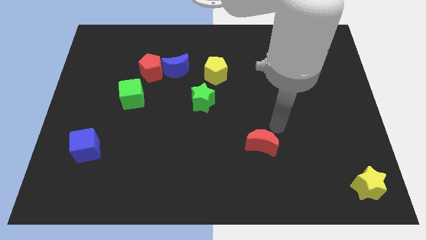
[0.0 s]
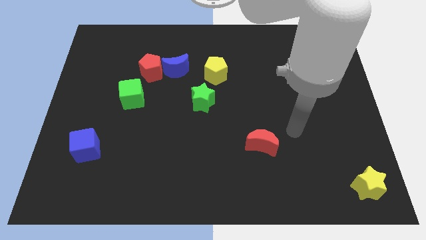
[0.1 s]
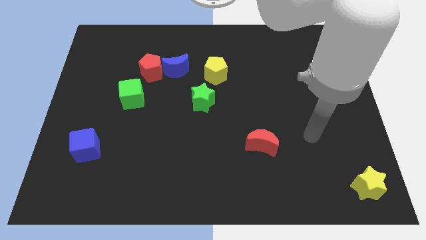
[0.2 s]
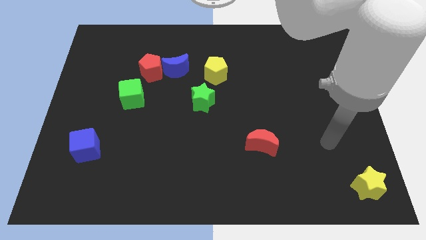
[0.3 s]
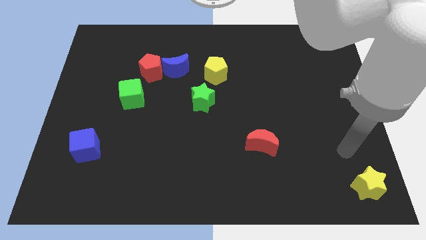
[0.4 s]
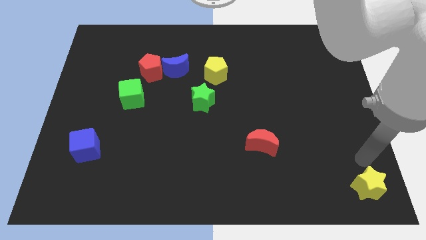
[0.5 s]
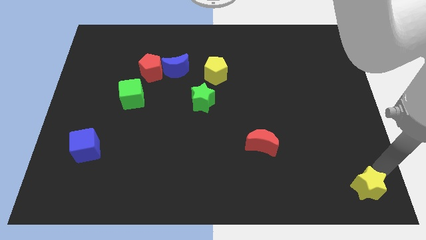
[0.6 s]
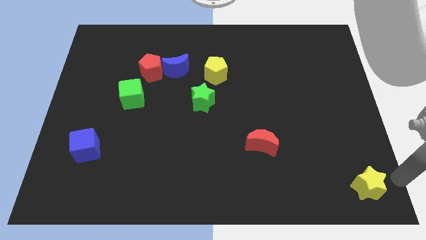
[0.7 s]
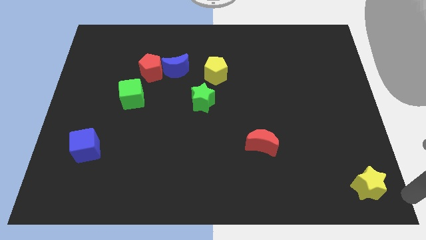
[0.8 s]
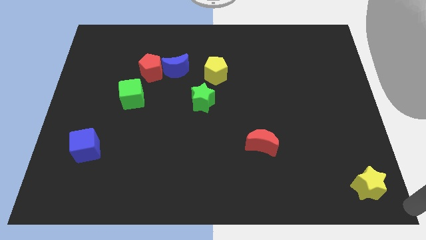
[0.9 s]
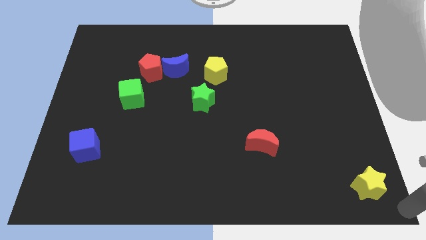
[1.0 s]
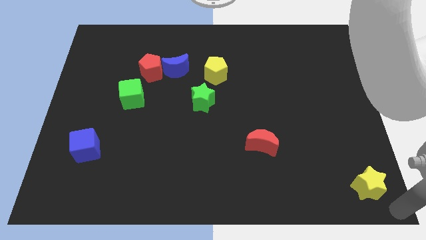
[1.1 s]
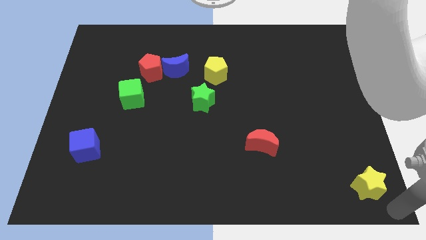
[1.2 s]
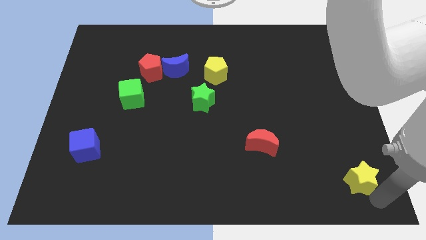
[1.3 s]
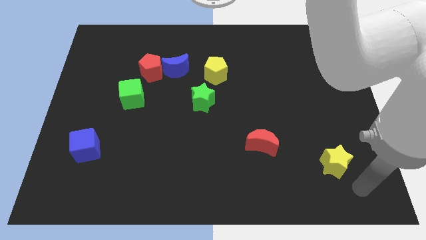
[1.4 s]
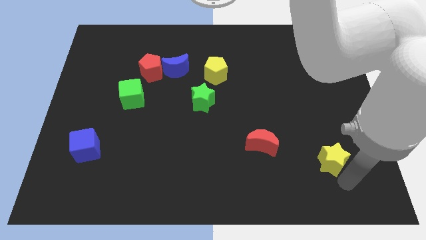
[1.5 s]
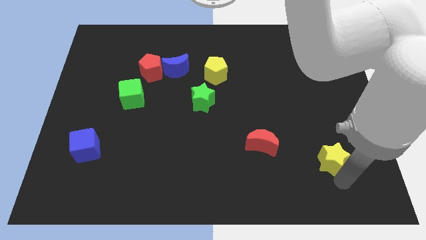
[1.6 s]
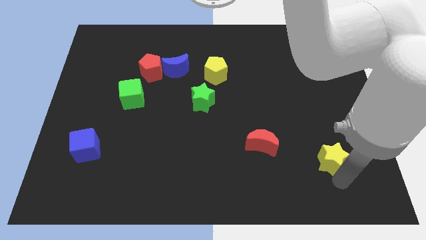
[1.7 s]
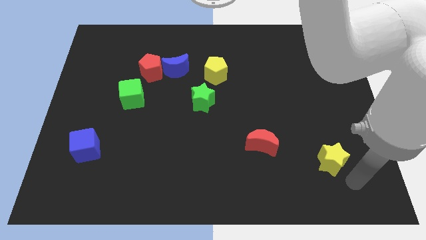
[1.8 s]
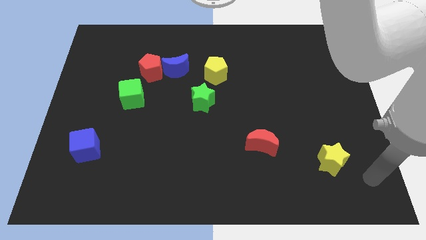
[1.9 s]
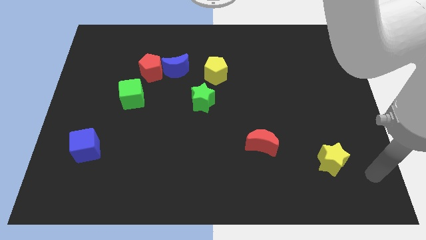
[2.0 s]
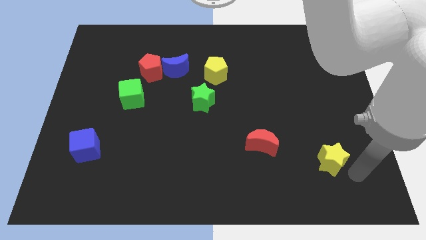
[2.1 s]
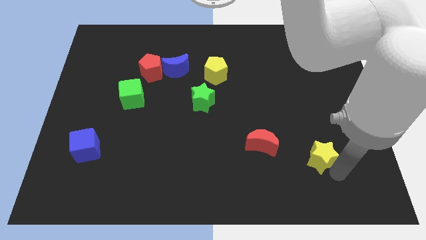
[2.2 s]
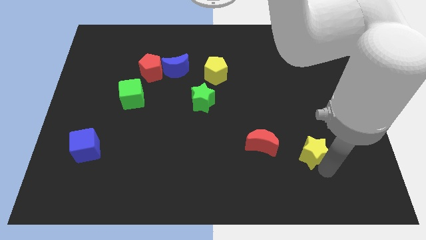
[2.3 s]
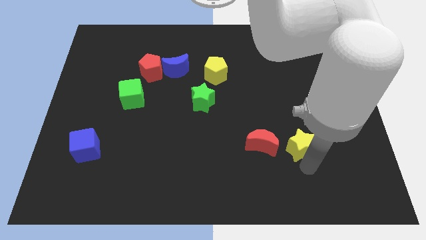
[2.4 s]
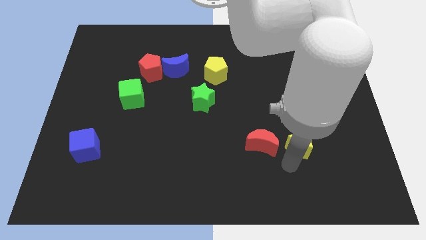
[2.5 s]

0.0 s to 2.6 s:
place the yellow star beside red crescent

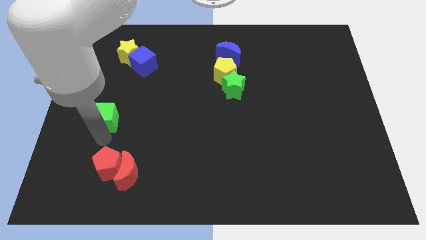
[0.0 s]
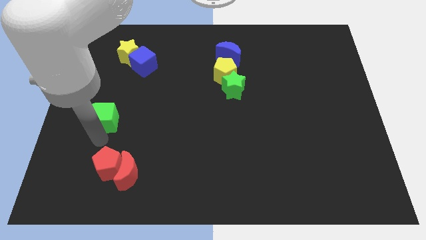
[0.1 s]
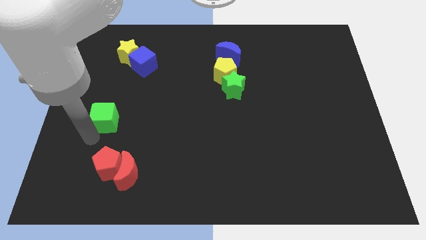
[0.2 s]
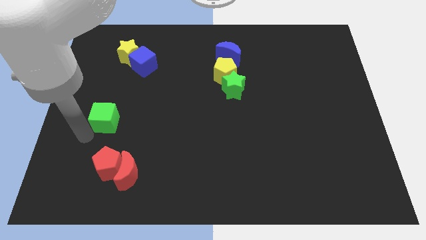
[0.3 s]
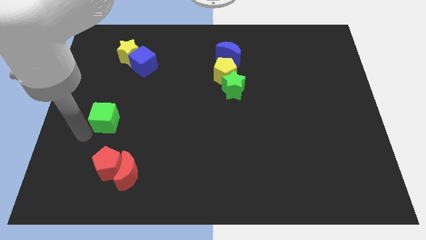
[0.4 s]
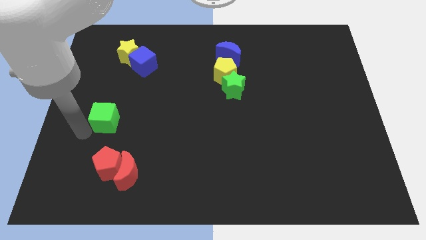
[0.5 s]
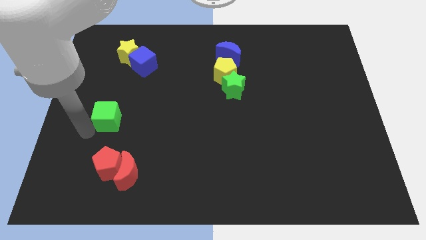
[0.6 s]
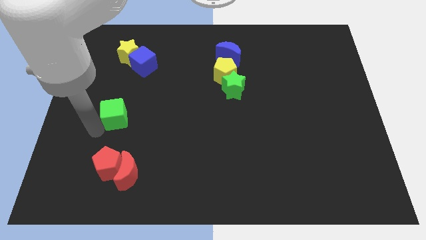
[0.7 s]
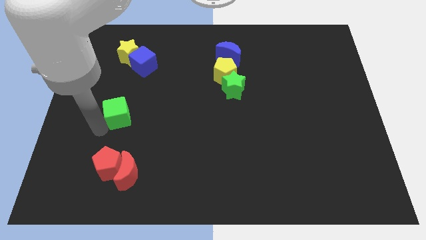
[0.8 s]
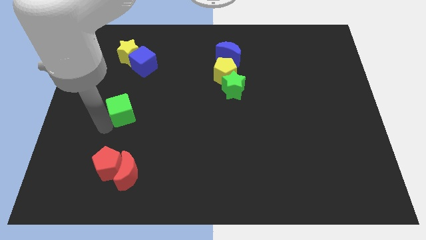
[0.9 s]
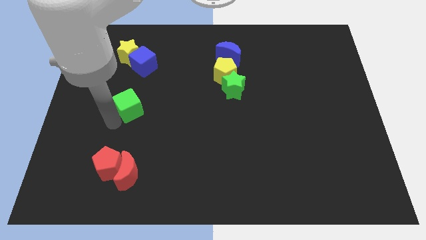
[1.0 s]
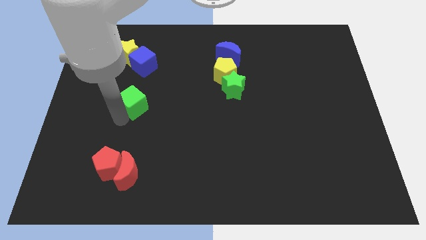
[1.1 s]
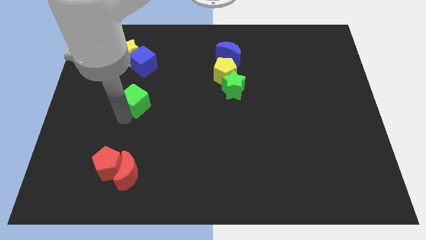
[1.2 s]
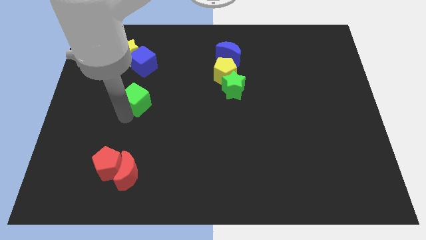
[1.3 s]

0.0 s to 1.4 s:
move the green cube towards the top side of the board

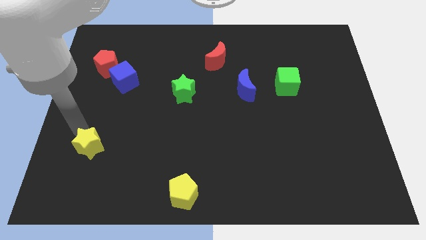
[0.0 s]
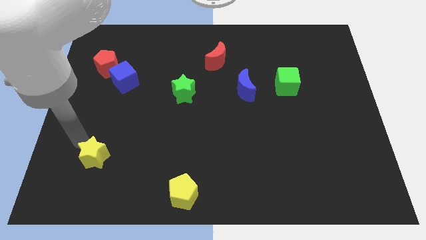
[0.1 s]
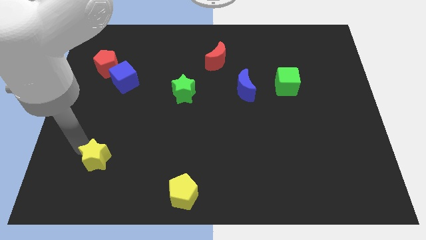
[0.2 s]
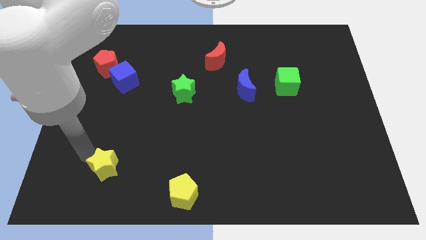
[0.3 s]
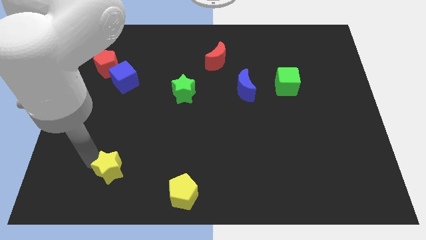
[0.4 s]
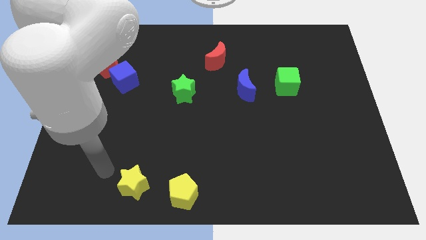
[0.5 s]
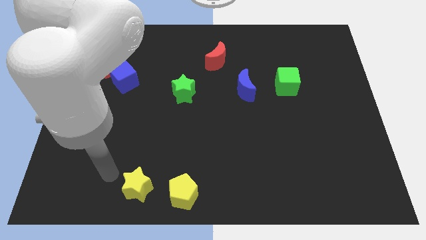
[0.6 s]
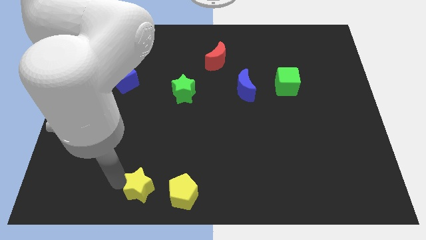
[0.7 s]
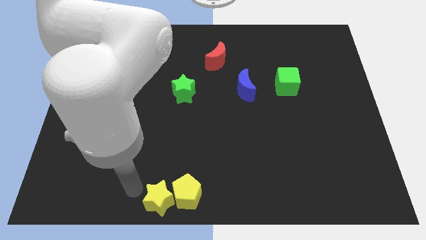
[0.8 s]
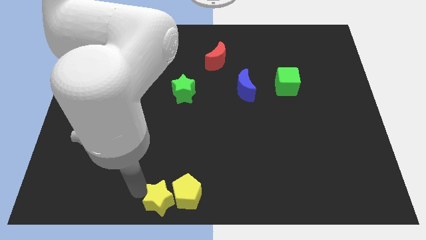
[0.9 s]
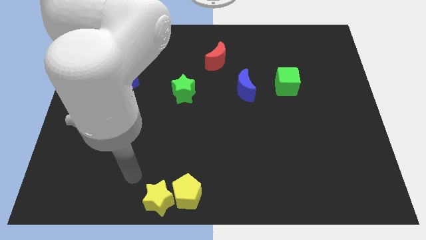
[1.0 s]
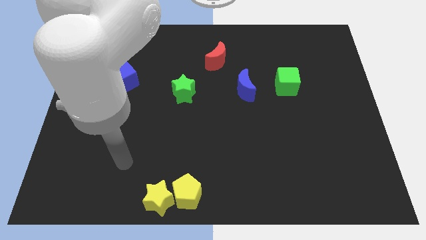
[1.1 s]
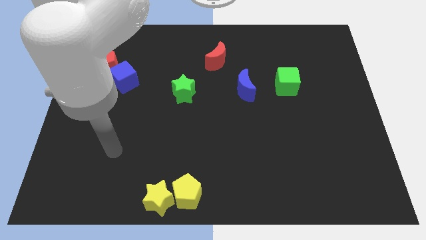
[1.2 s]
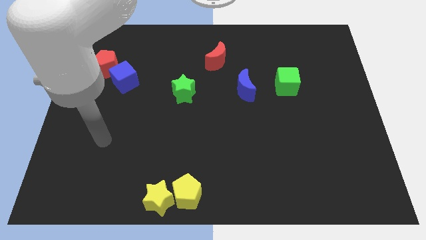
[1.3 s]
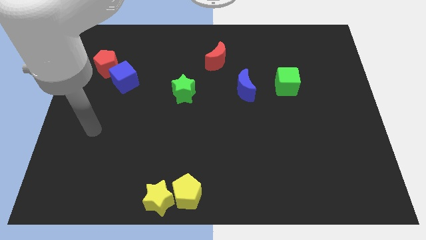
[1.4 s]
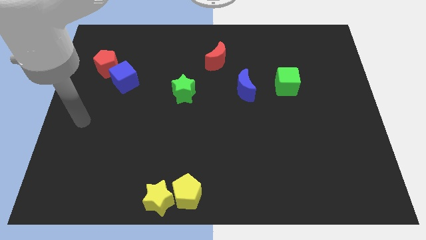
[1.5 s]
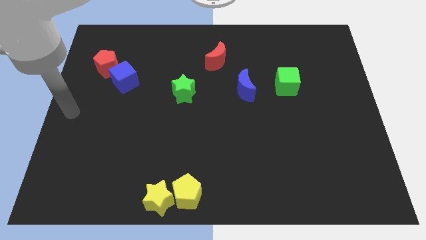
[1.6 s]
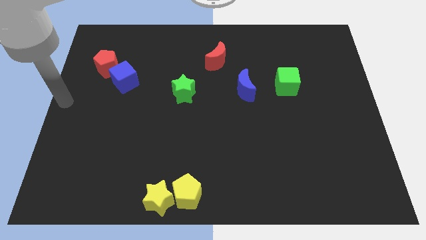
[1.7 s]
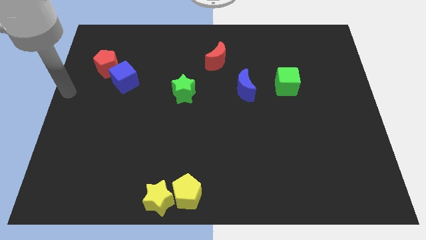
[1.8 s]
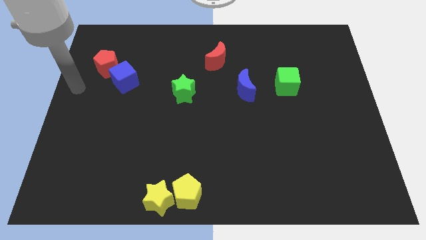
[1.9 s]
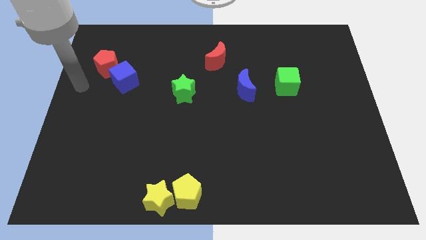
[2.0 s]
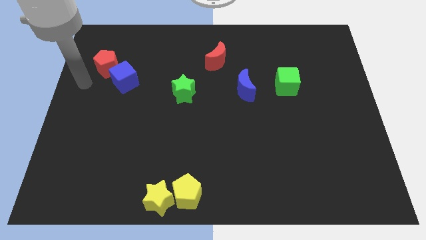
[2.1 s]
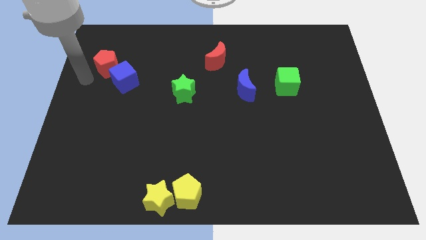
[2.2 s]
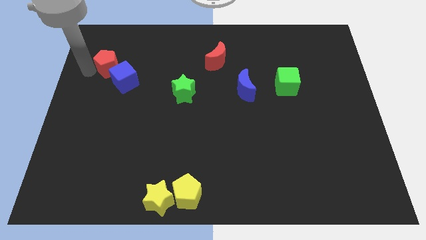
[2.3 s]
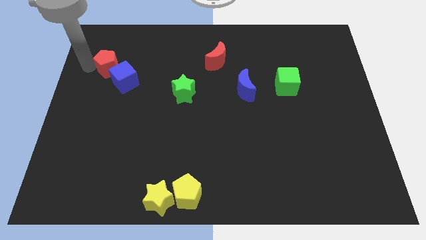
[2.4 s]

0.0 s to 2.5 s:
place the yellow star to the left side of the yellow pentagon

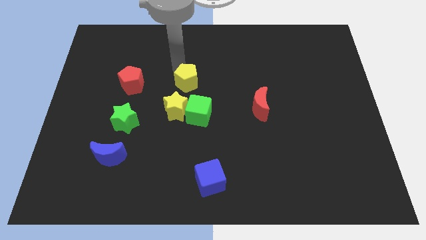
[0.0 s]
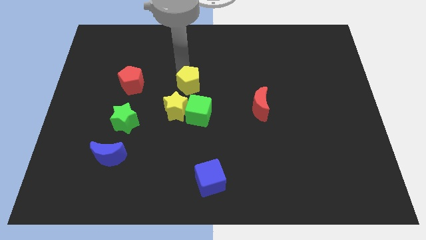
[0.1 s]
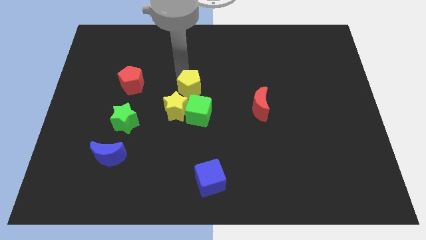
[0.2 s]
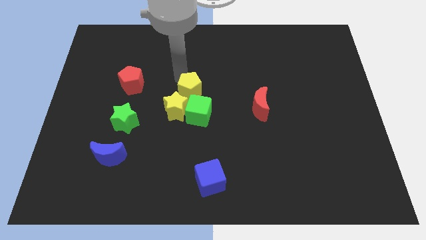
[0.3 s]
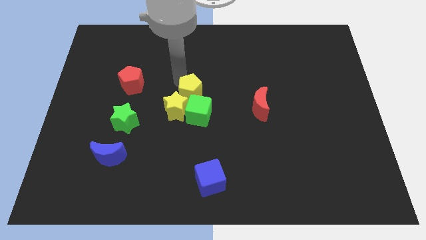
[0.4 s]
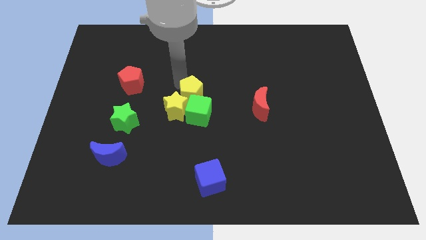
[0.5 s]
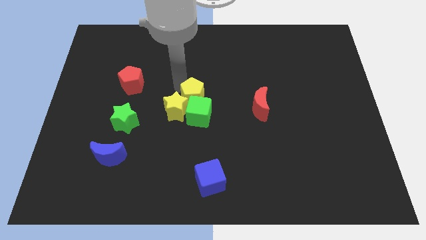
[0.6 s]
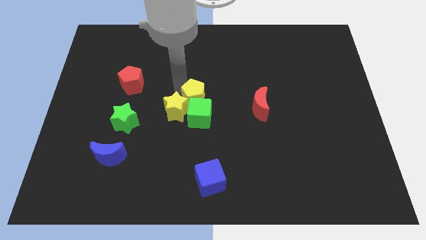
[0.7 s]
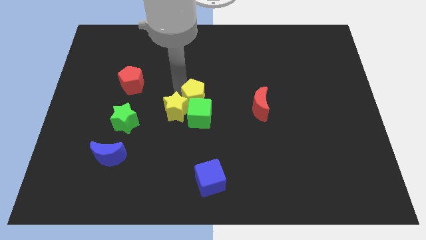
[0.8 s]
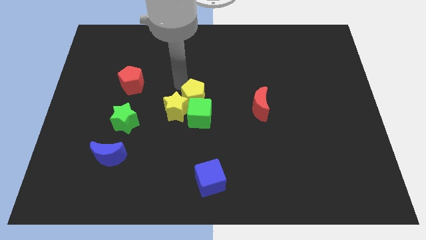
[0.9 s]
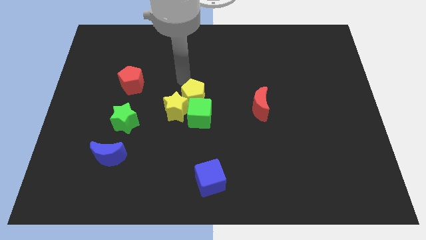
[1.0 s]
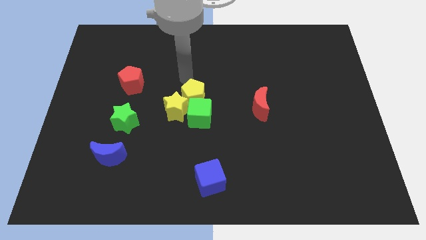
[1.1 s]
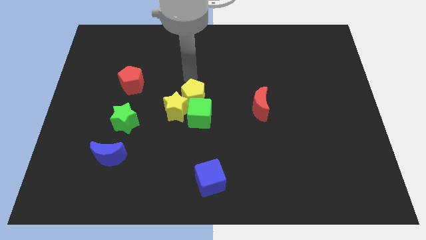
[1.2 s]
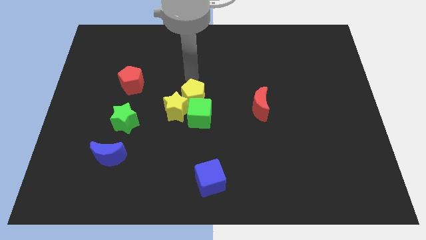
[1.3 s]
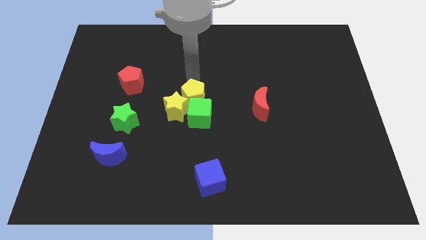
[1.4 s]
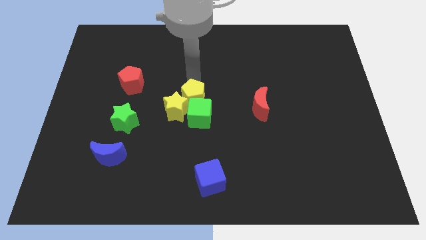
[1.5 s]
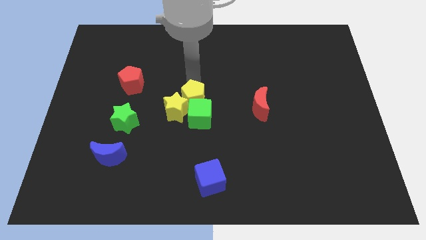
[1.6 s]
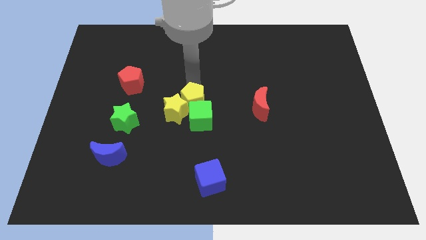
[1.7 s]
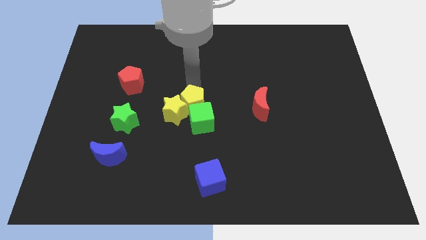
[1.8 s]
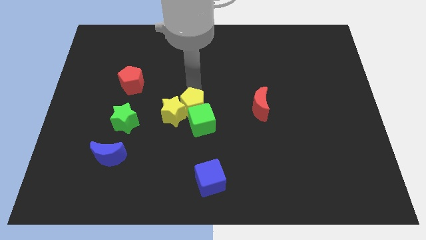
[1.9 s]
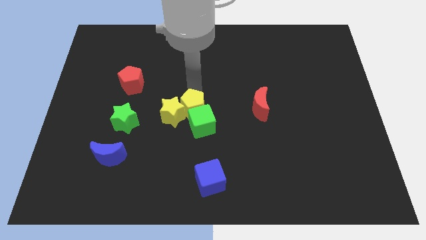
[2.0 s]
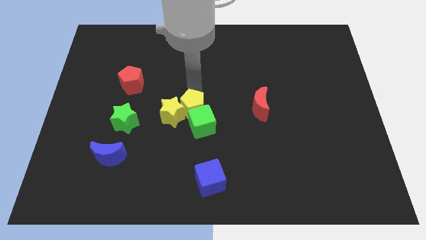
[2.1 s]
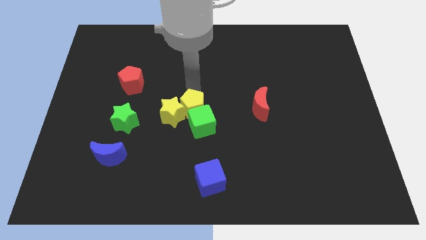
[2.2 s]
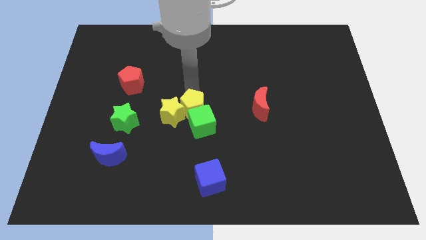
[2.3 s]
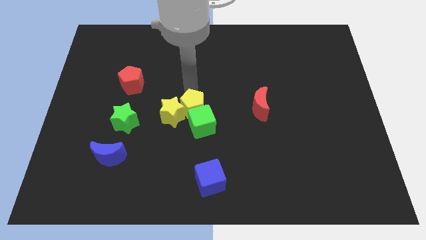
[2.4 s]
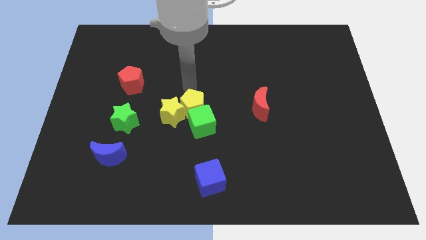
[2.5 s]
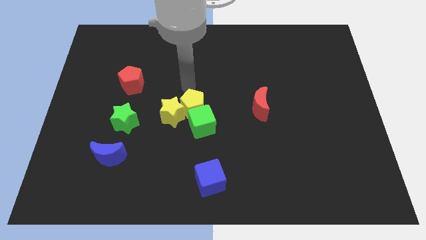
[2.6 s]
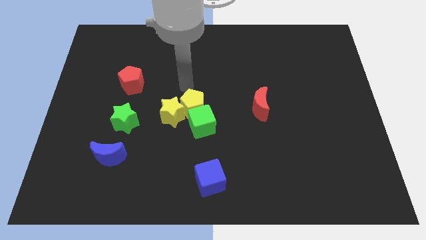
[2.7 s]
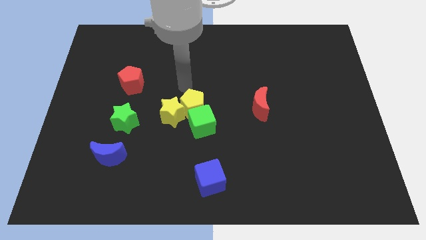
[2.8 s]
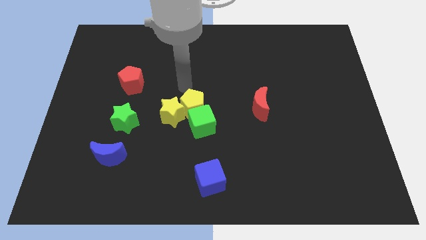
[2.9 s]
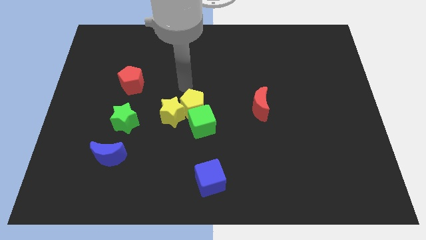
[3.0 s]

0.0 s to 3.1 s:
slide the yellow pentagon at the upper side of the green cube
